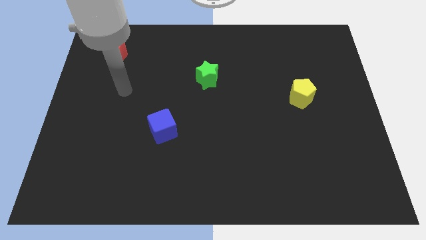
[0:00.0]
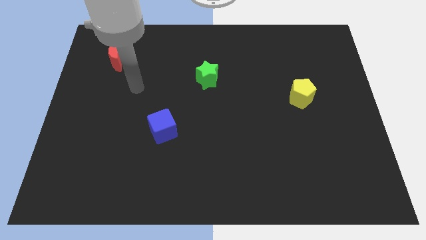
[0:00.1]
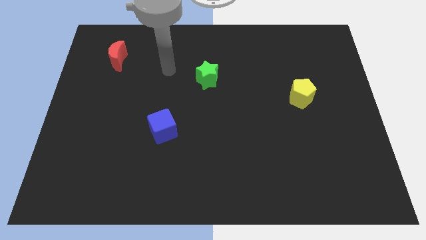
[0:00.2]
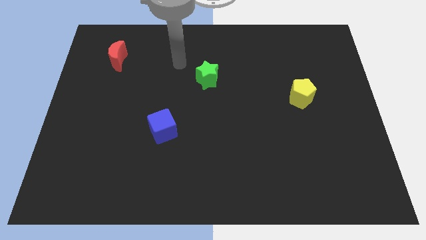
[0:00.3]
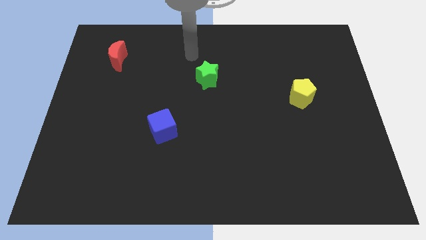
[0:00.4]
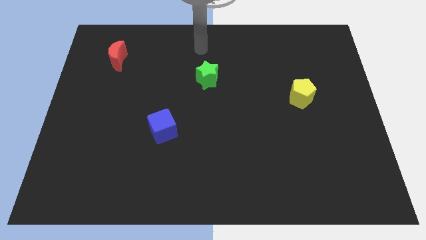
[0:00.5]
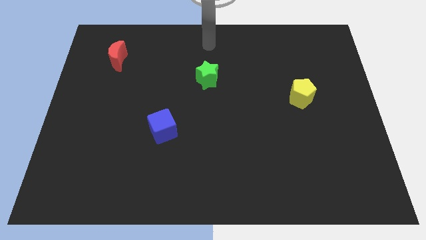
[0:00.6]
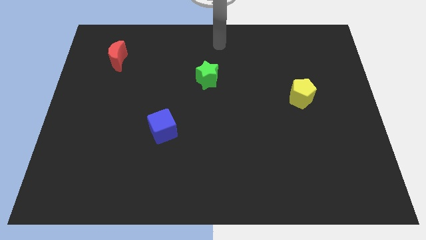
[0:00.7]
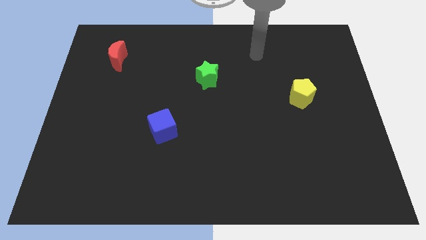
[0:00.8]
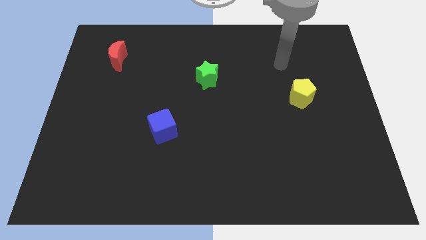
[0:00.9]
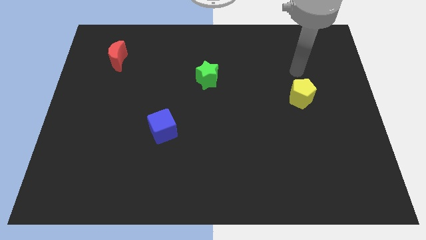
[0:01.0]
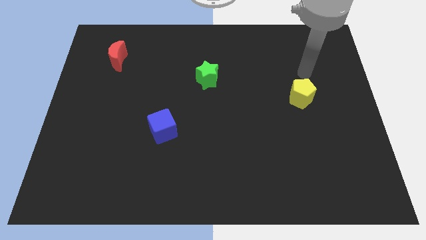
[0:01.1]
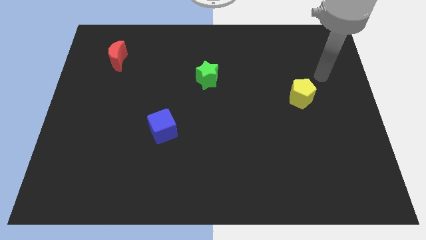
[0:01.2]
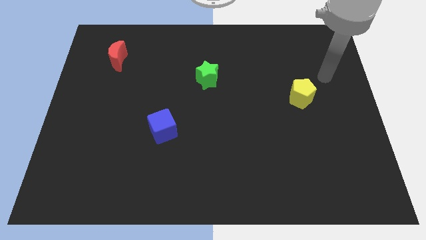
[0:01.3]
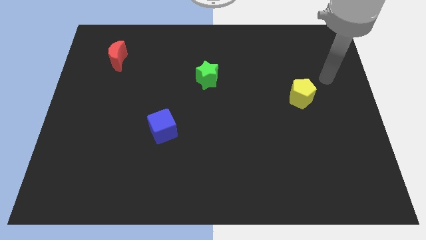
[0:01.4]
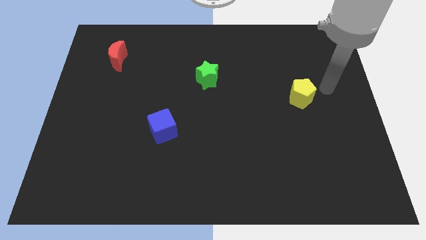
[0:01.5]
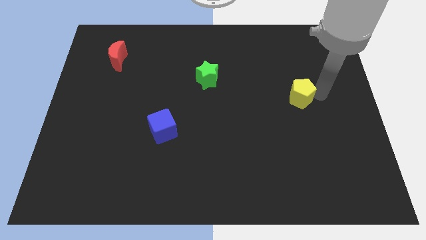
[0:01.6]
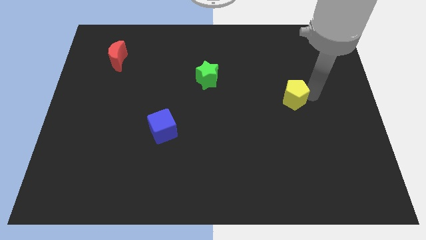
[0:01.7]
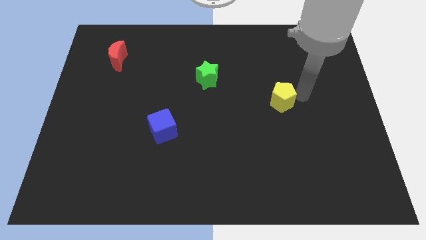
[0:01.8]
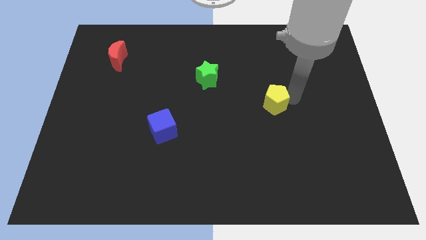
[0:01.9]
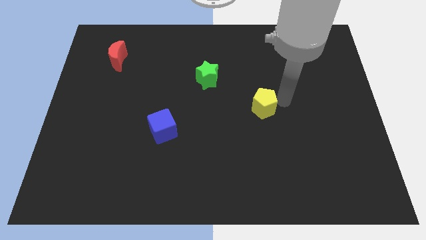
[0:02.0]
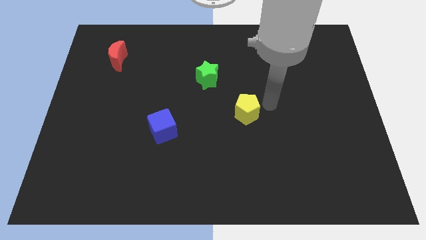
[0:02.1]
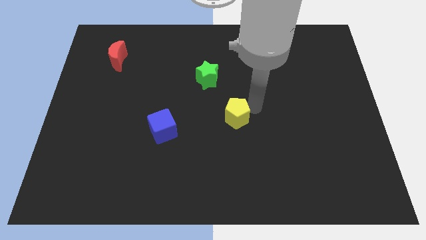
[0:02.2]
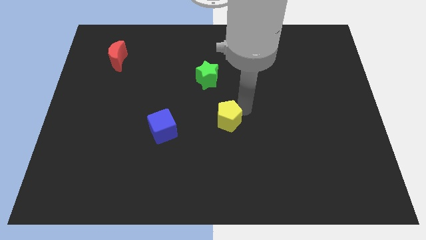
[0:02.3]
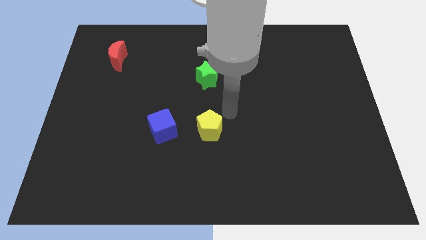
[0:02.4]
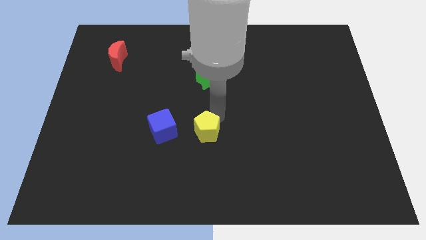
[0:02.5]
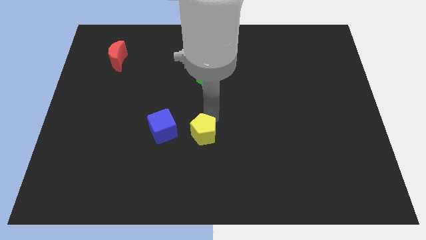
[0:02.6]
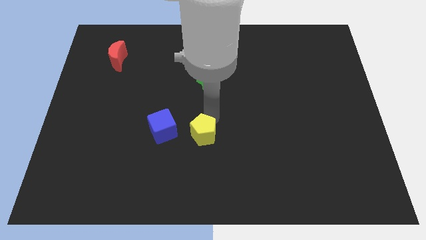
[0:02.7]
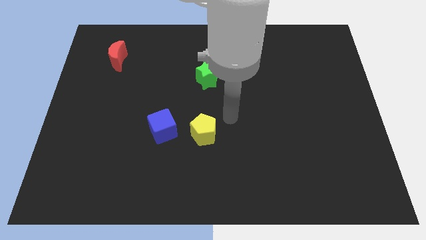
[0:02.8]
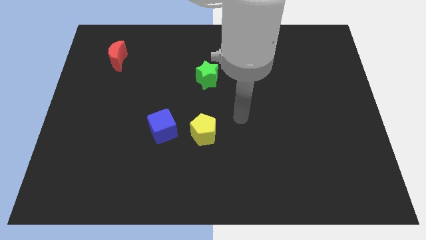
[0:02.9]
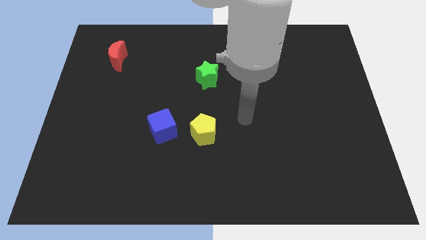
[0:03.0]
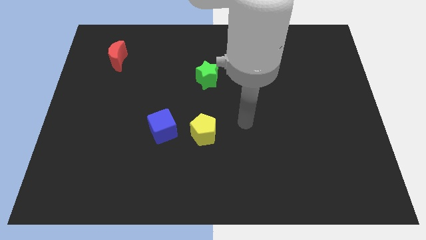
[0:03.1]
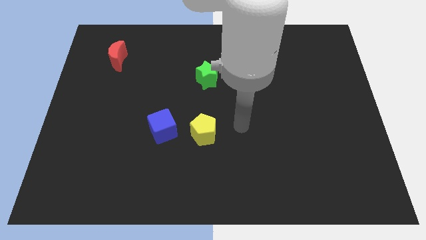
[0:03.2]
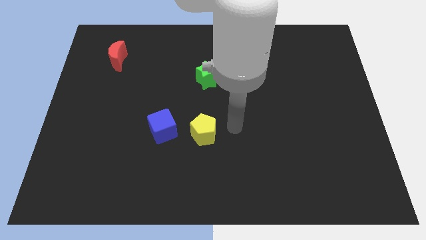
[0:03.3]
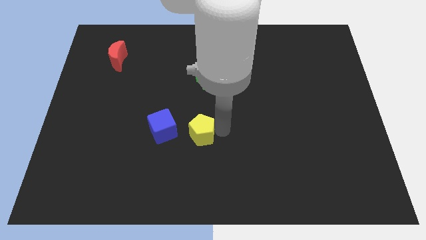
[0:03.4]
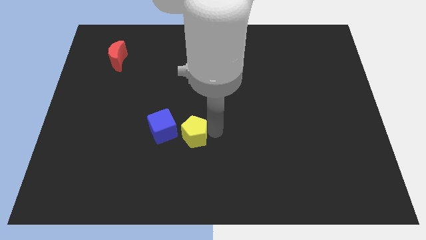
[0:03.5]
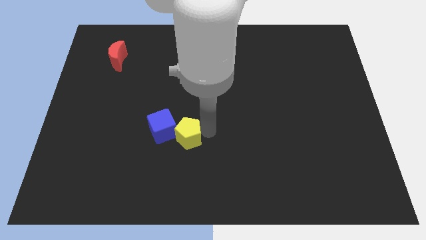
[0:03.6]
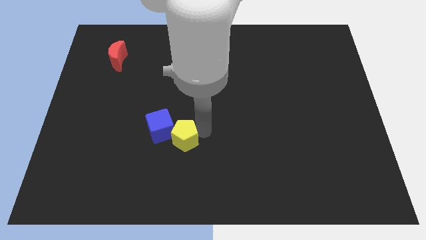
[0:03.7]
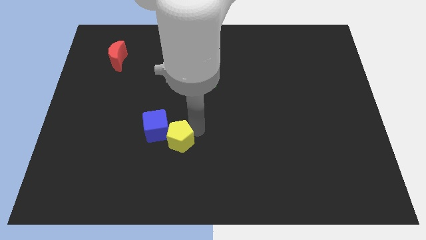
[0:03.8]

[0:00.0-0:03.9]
push the pentagon towards the blue cube

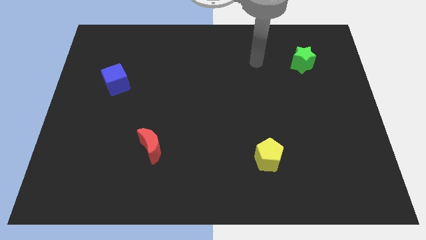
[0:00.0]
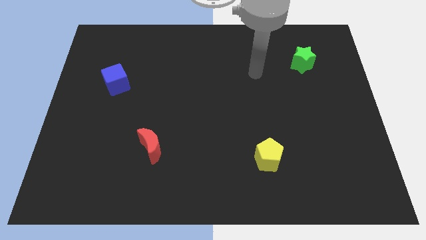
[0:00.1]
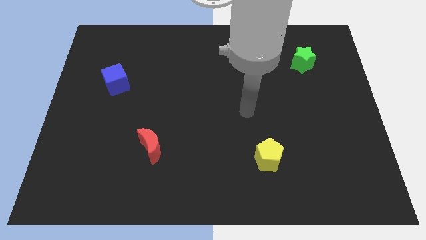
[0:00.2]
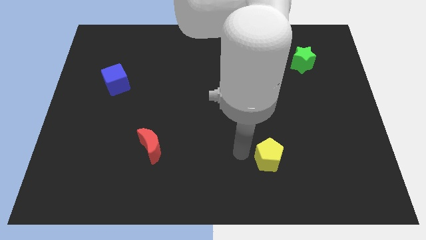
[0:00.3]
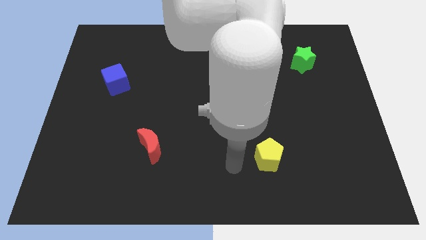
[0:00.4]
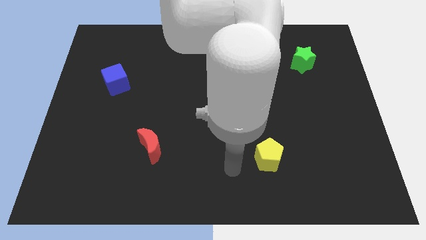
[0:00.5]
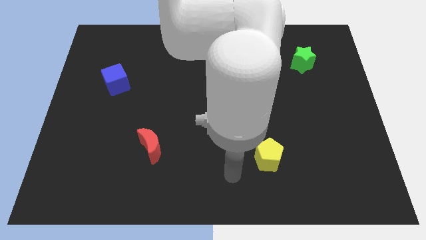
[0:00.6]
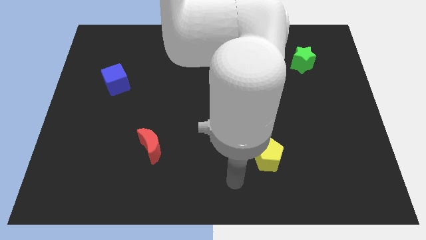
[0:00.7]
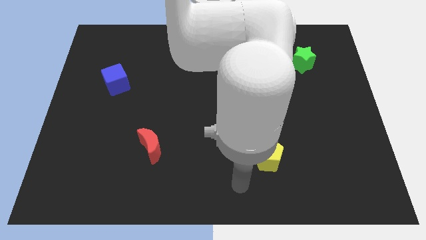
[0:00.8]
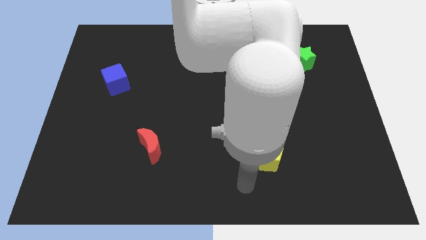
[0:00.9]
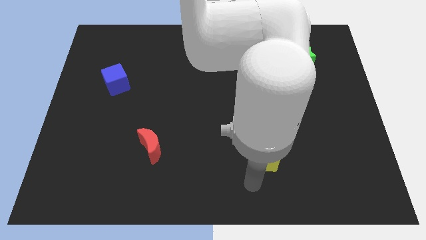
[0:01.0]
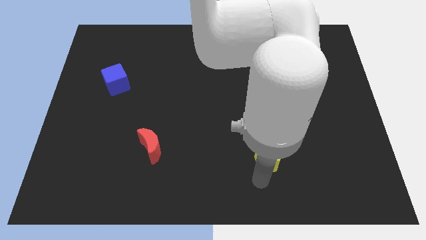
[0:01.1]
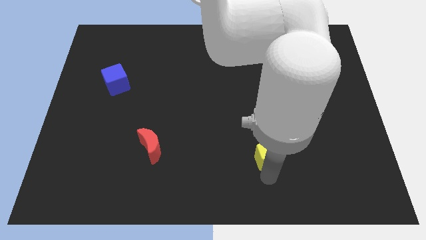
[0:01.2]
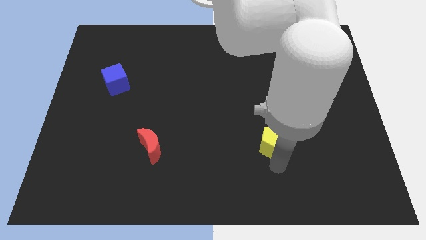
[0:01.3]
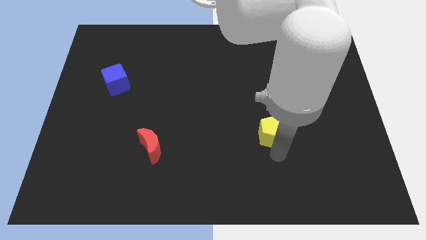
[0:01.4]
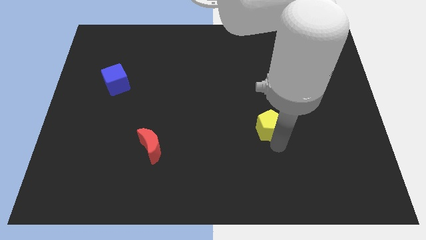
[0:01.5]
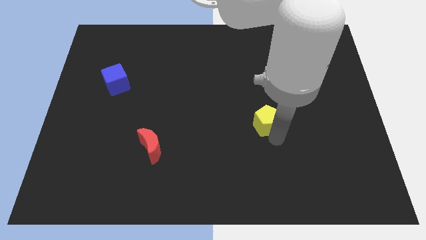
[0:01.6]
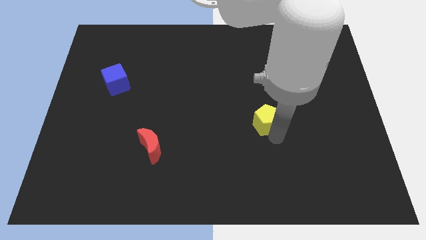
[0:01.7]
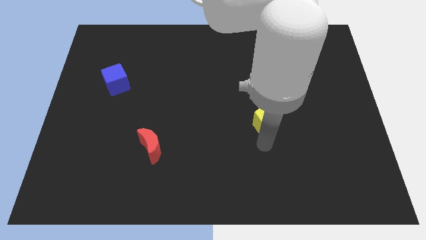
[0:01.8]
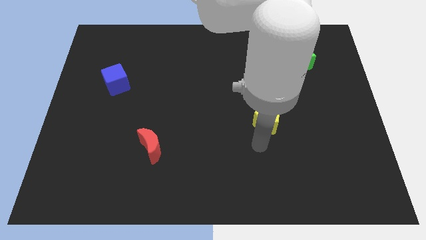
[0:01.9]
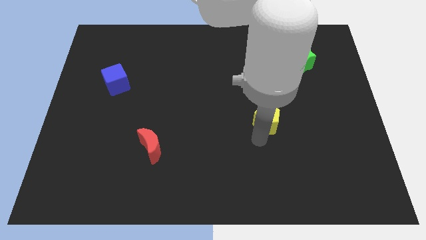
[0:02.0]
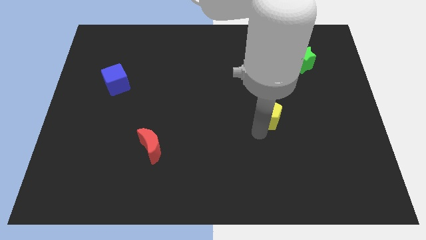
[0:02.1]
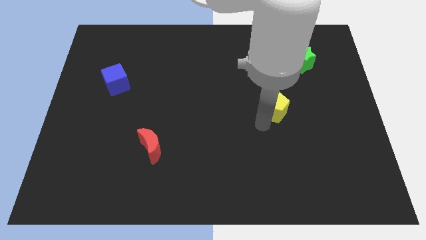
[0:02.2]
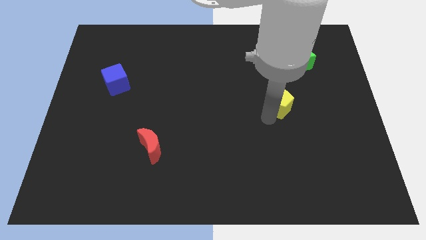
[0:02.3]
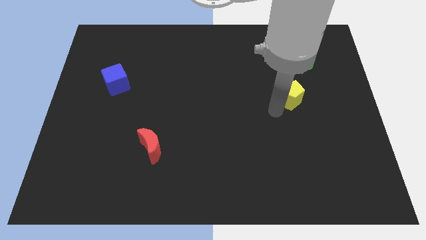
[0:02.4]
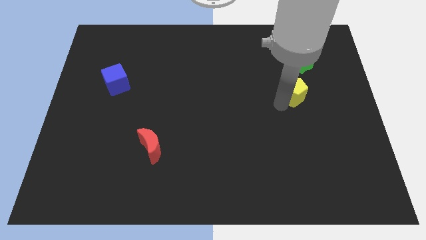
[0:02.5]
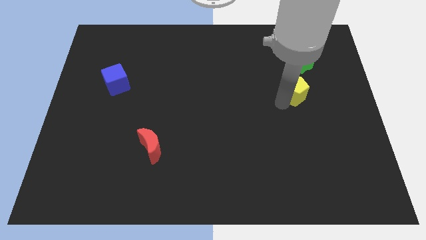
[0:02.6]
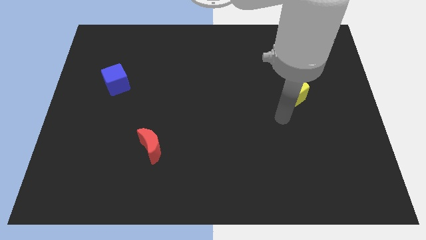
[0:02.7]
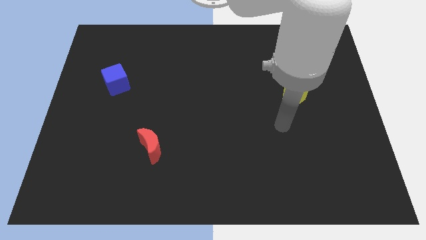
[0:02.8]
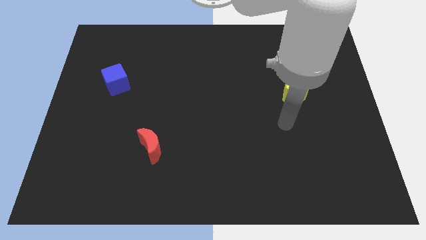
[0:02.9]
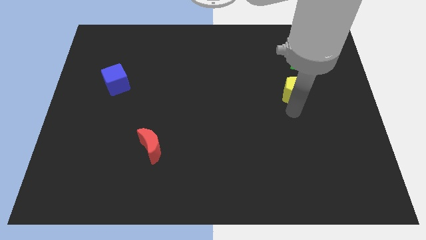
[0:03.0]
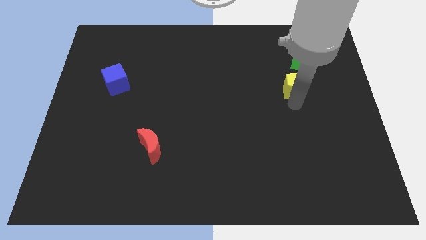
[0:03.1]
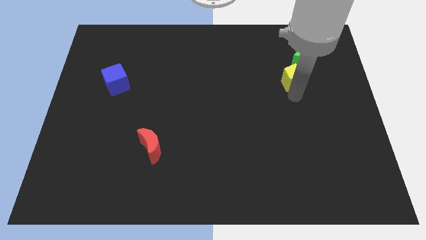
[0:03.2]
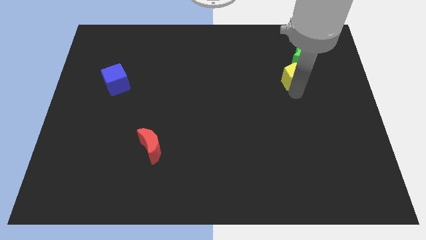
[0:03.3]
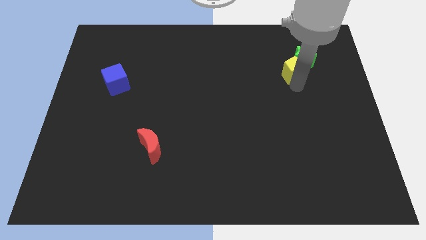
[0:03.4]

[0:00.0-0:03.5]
push the pentagon to the star

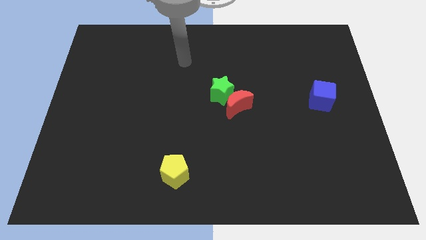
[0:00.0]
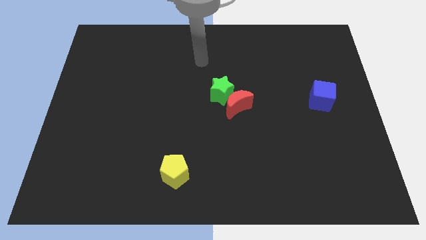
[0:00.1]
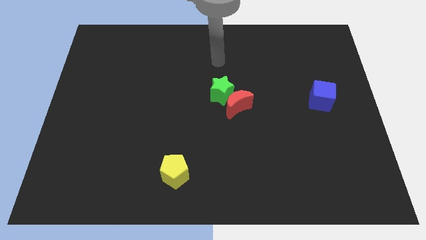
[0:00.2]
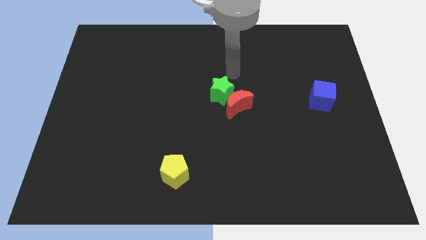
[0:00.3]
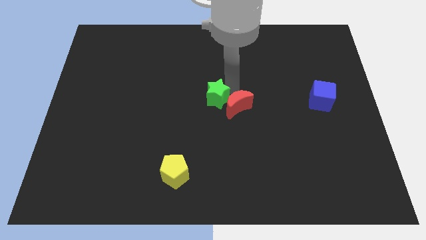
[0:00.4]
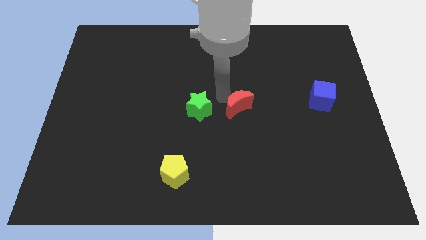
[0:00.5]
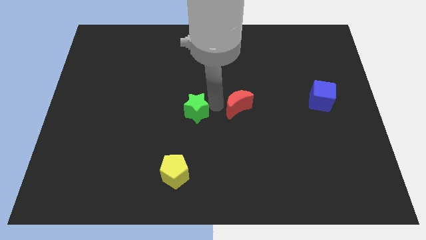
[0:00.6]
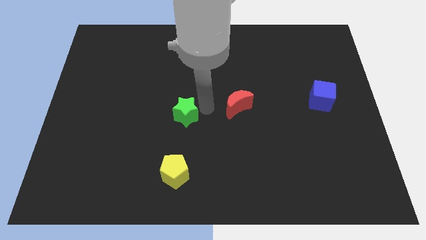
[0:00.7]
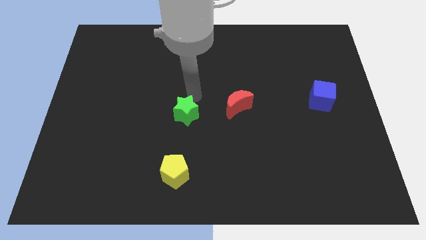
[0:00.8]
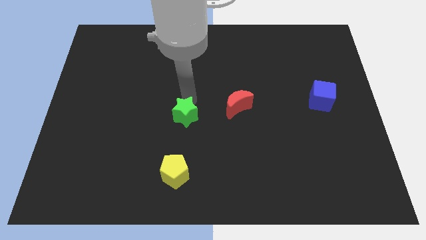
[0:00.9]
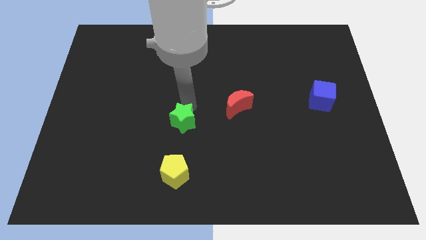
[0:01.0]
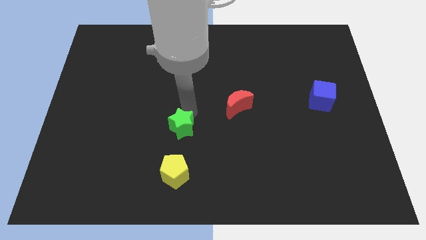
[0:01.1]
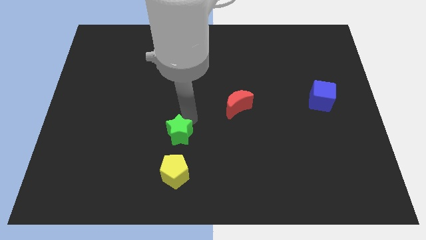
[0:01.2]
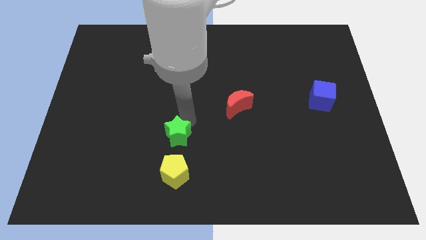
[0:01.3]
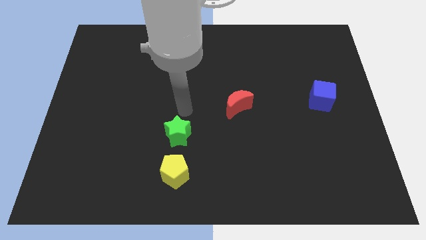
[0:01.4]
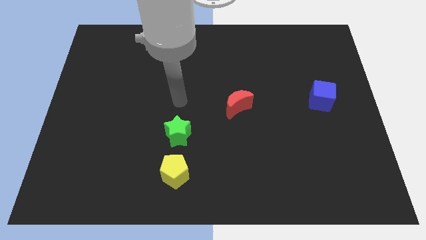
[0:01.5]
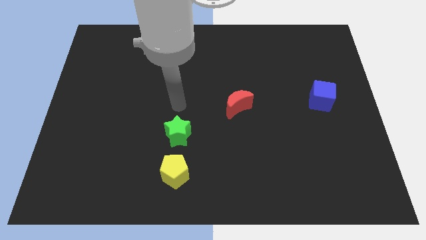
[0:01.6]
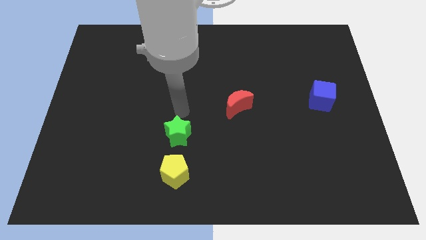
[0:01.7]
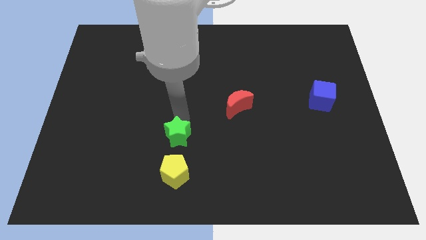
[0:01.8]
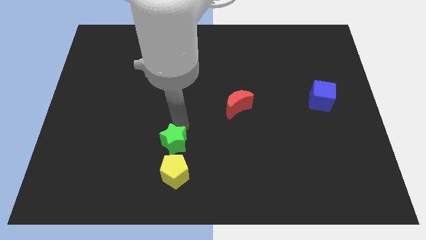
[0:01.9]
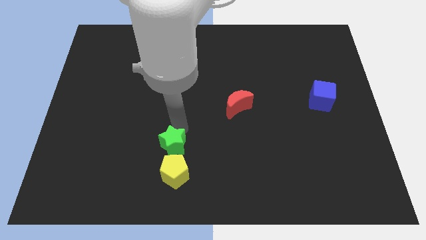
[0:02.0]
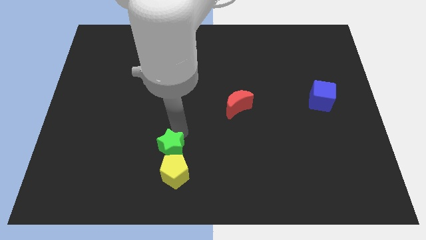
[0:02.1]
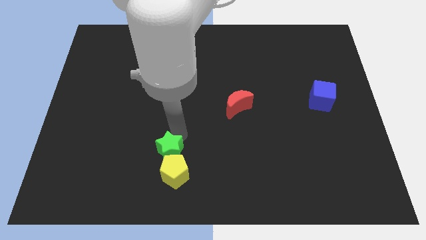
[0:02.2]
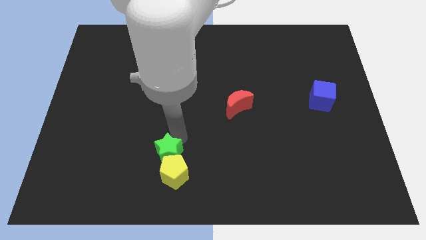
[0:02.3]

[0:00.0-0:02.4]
slide the star next to the yellow pentagon
